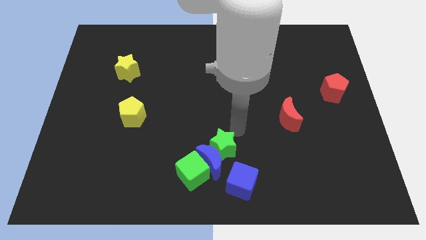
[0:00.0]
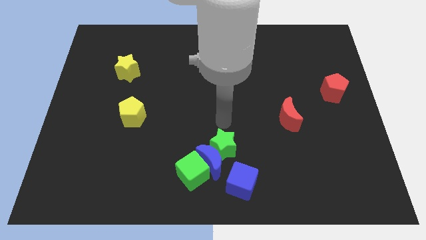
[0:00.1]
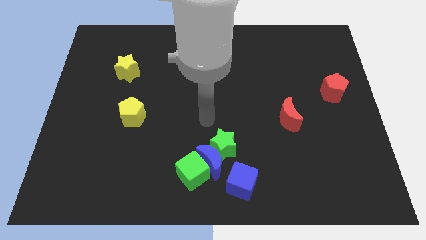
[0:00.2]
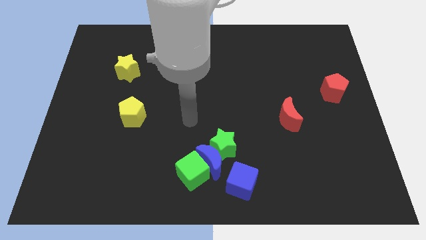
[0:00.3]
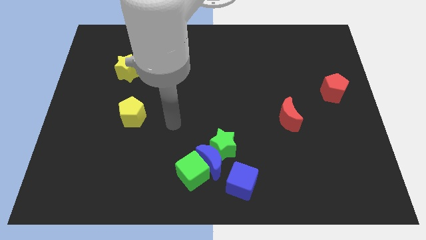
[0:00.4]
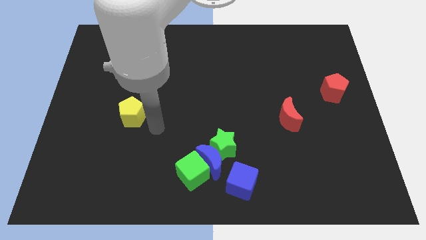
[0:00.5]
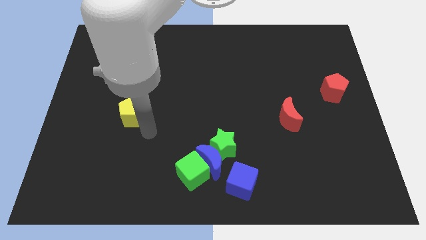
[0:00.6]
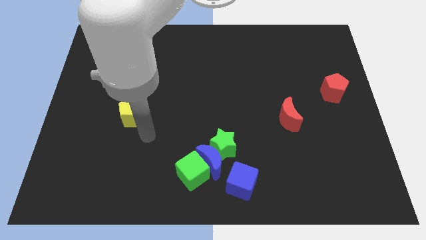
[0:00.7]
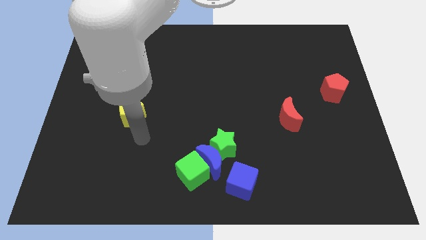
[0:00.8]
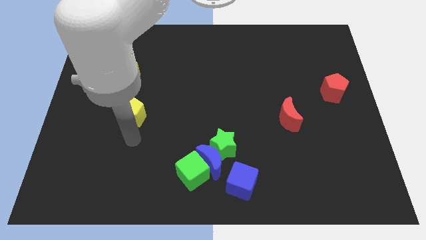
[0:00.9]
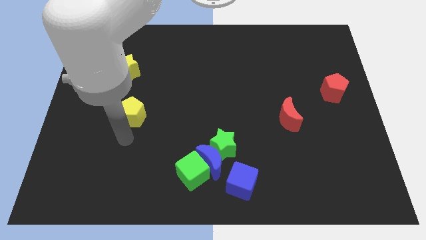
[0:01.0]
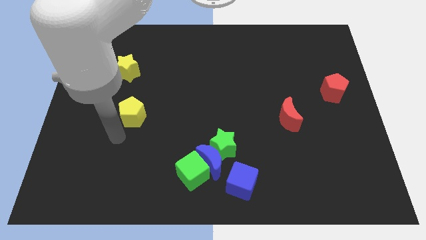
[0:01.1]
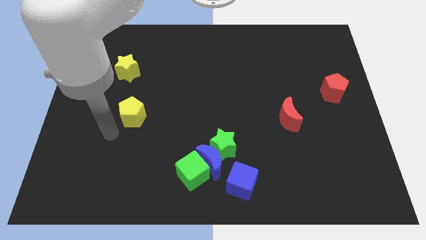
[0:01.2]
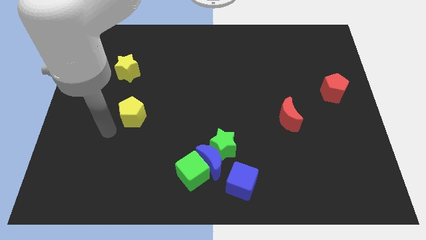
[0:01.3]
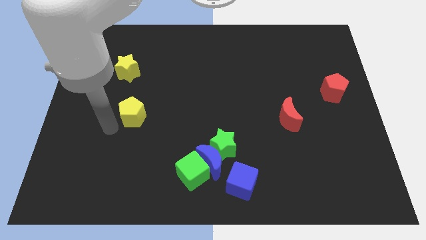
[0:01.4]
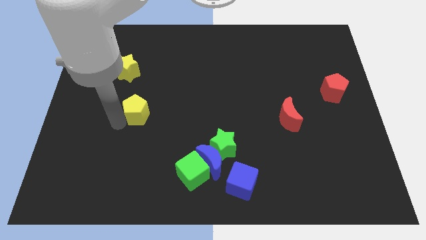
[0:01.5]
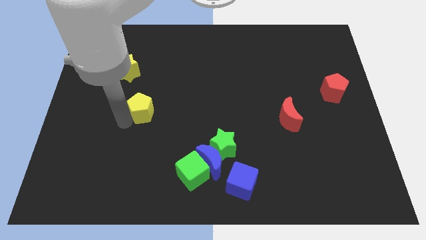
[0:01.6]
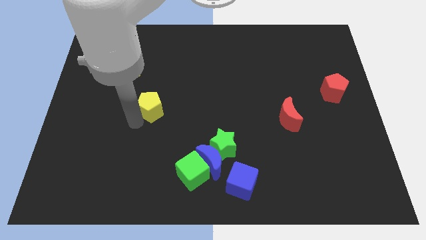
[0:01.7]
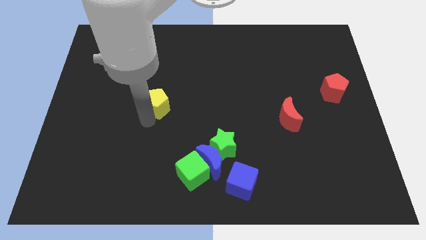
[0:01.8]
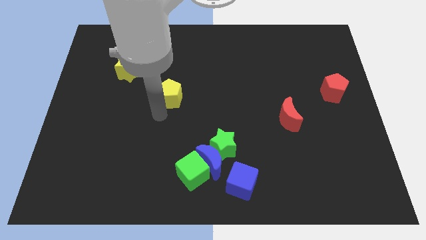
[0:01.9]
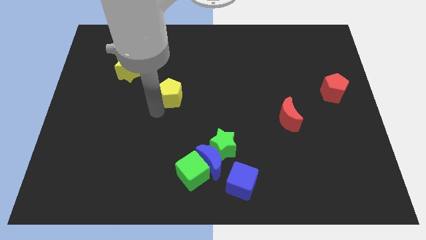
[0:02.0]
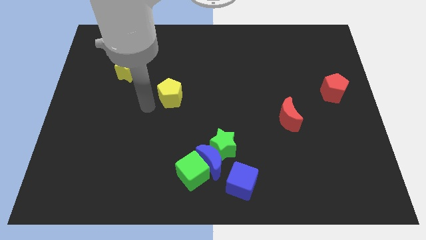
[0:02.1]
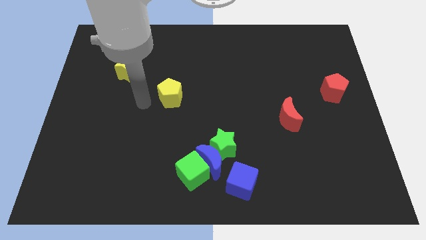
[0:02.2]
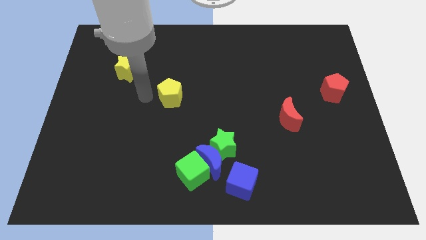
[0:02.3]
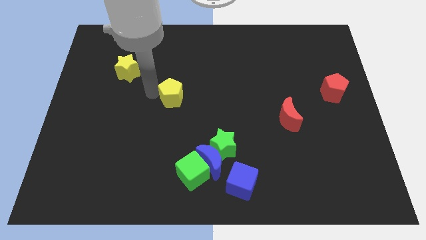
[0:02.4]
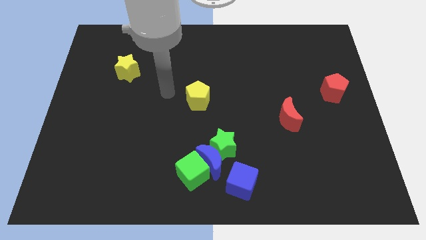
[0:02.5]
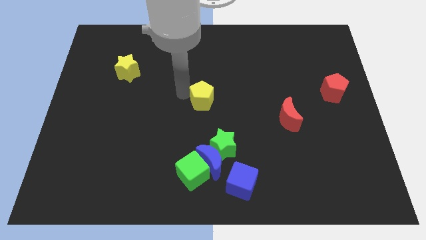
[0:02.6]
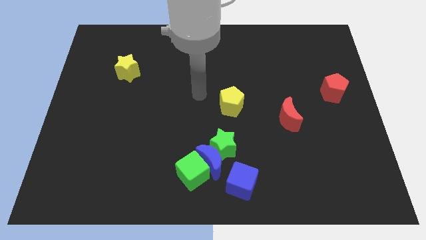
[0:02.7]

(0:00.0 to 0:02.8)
push the yellow pentagon to the top of the green star

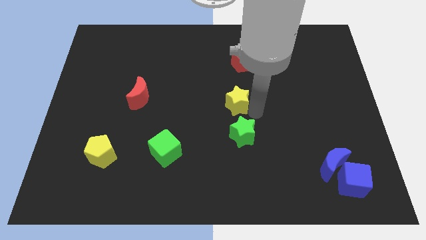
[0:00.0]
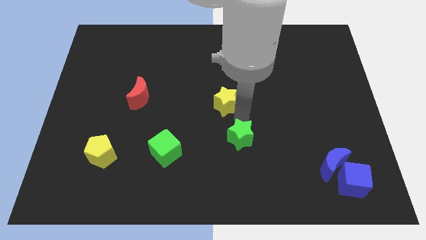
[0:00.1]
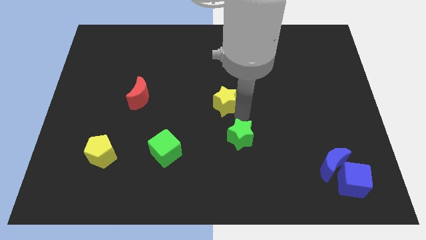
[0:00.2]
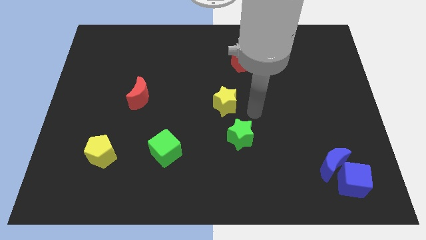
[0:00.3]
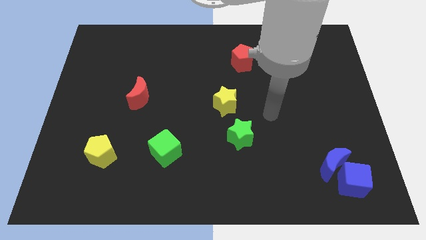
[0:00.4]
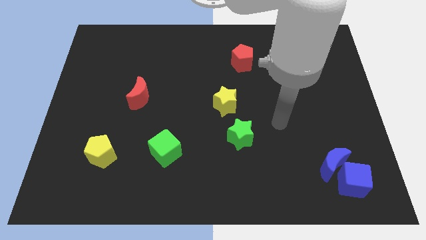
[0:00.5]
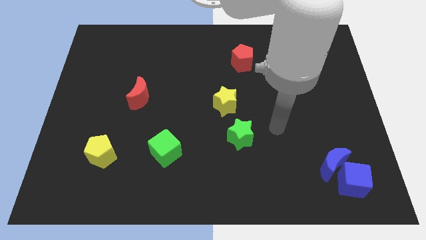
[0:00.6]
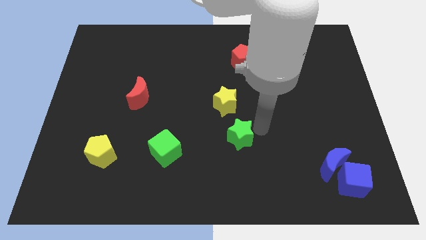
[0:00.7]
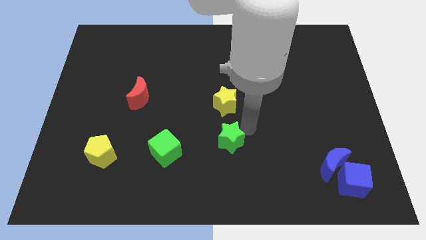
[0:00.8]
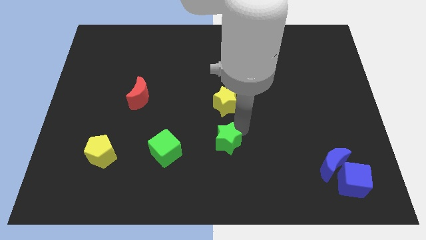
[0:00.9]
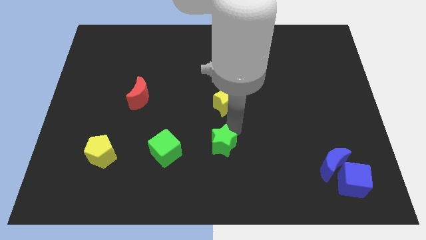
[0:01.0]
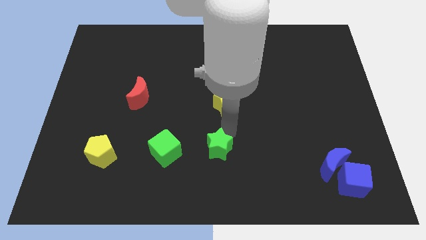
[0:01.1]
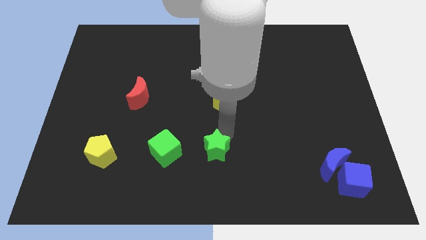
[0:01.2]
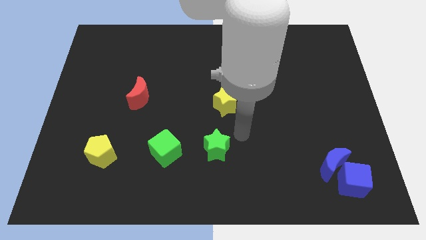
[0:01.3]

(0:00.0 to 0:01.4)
place the green star horizontally to the right side of the green cube

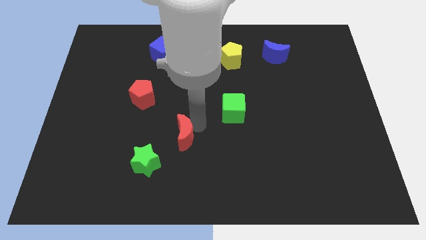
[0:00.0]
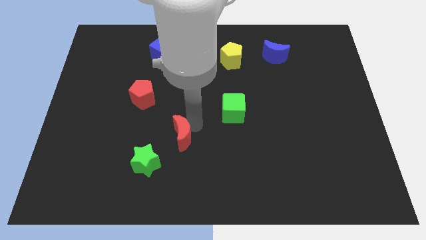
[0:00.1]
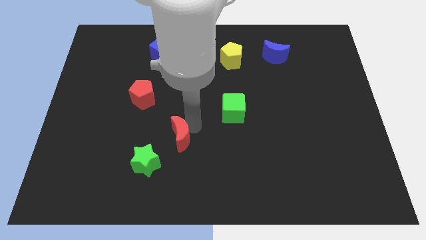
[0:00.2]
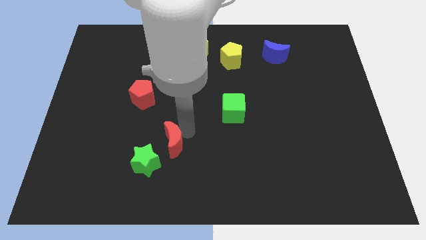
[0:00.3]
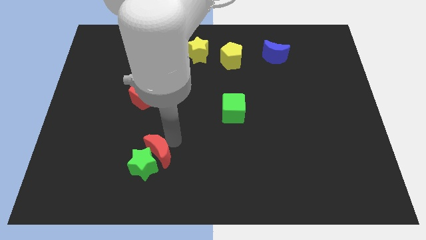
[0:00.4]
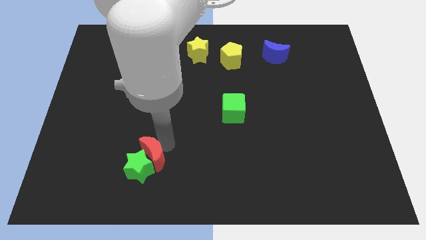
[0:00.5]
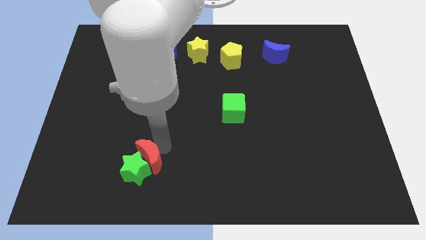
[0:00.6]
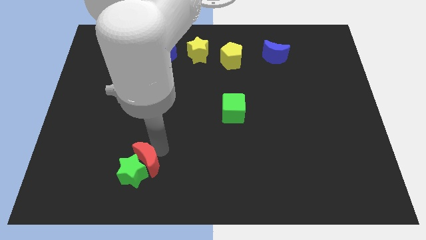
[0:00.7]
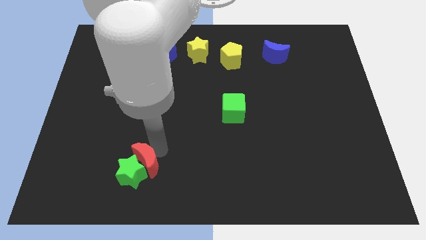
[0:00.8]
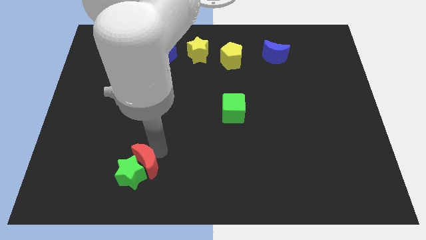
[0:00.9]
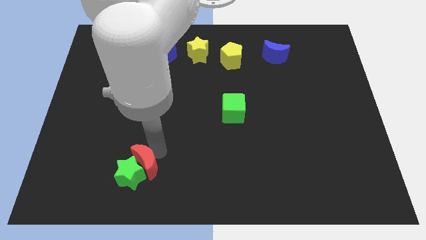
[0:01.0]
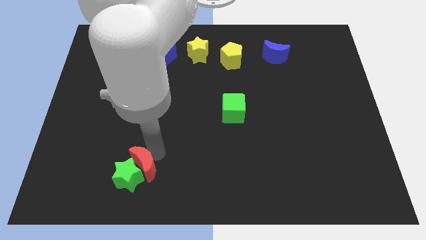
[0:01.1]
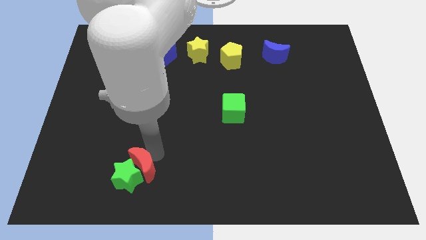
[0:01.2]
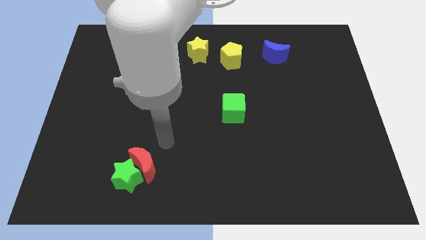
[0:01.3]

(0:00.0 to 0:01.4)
place red crescent below red pentagon

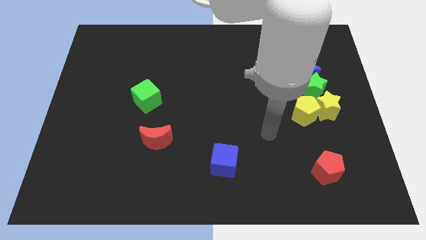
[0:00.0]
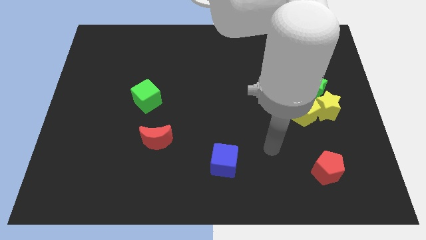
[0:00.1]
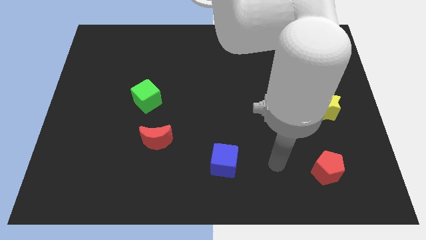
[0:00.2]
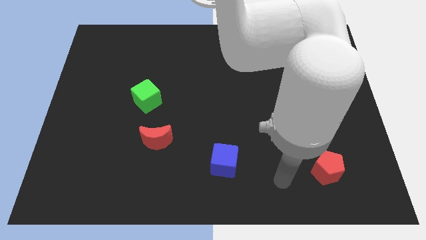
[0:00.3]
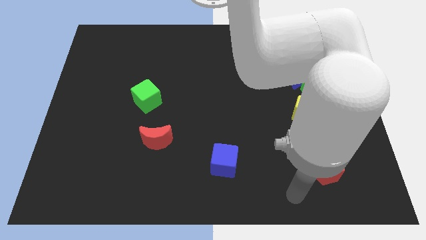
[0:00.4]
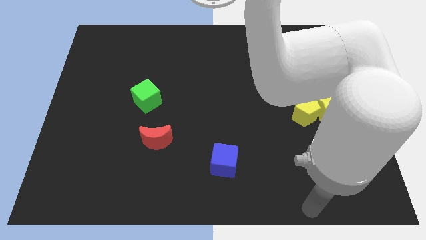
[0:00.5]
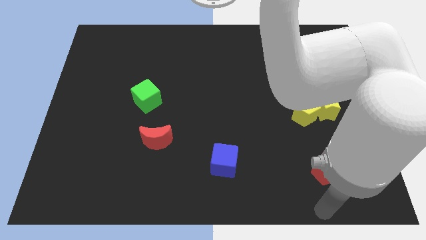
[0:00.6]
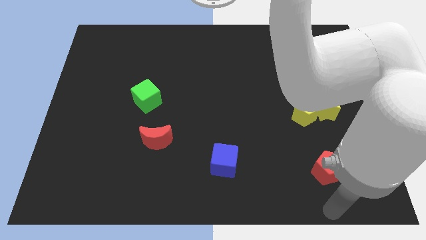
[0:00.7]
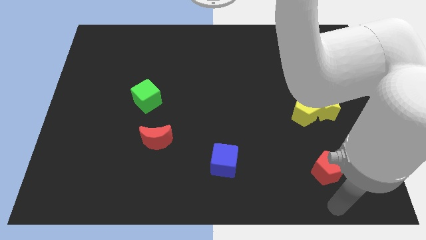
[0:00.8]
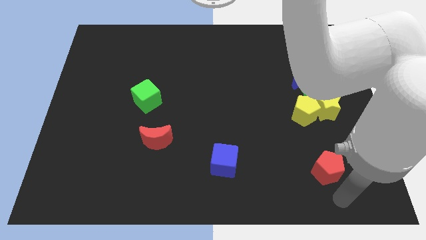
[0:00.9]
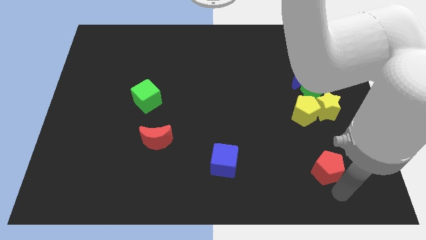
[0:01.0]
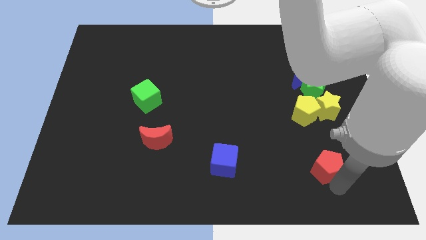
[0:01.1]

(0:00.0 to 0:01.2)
place the arm down to the red pentagon

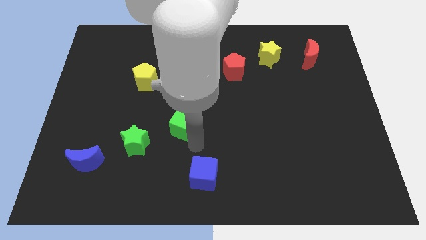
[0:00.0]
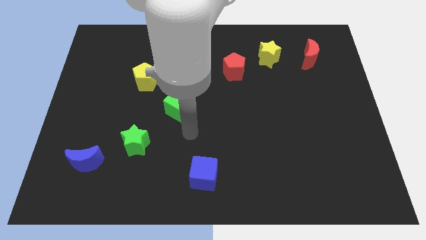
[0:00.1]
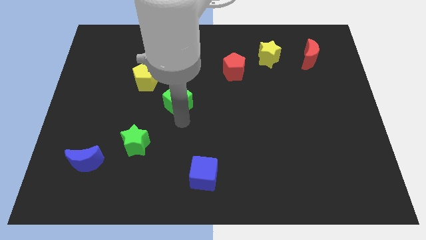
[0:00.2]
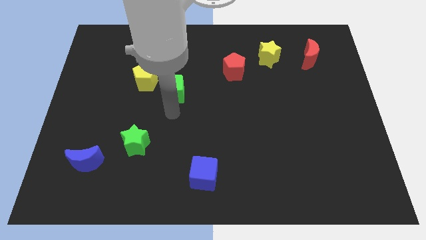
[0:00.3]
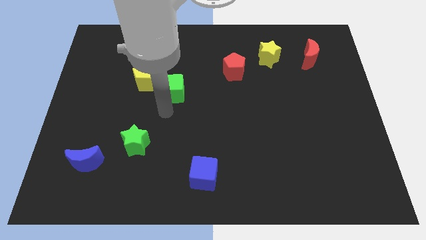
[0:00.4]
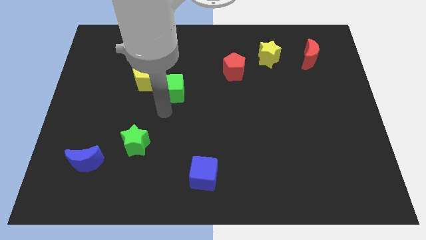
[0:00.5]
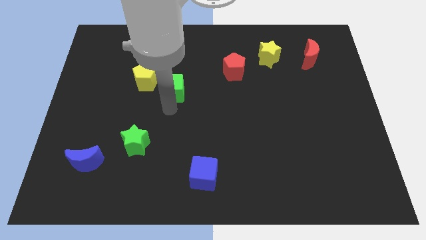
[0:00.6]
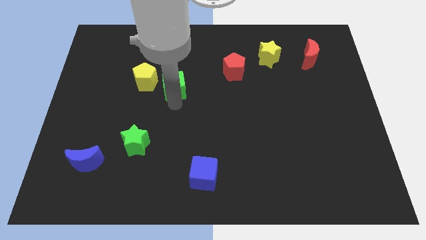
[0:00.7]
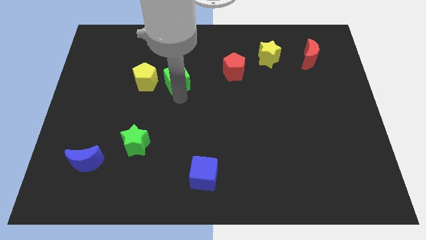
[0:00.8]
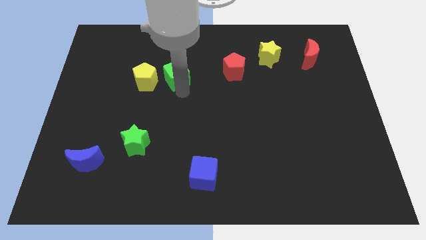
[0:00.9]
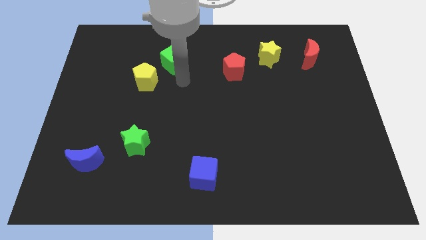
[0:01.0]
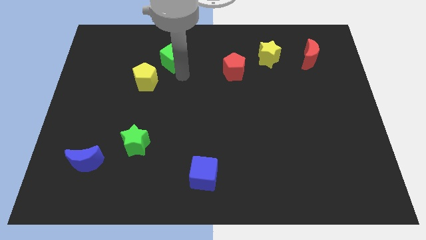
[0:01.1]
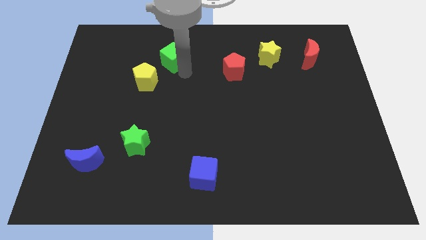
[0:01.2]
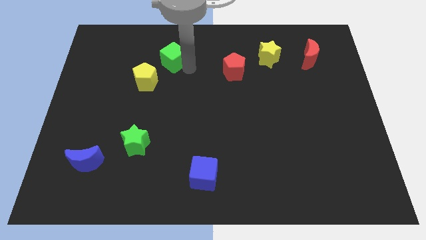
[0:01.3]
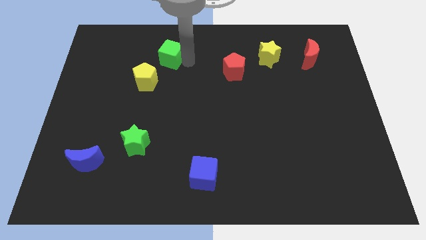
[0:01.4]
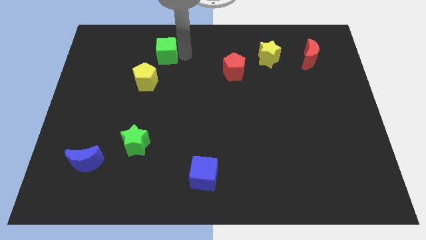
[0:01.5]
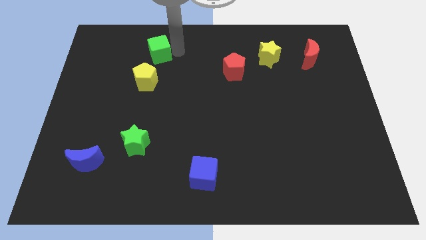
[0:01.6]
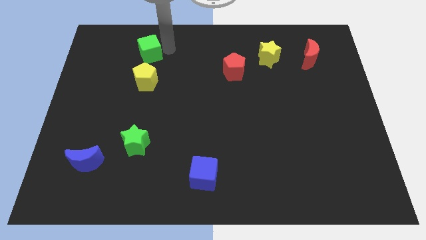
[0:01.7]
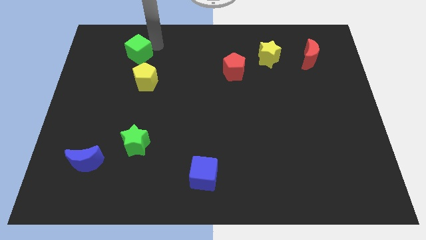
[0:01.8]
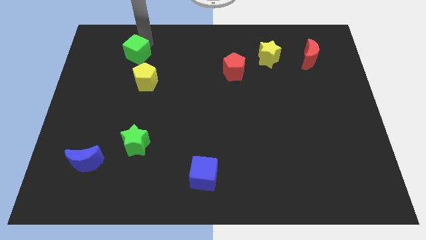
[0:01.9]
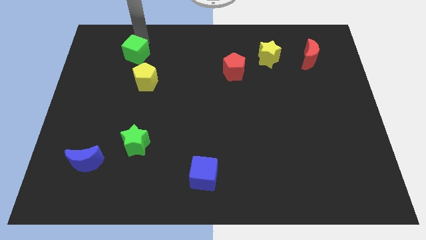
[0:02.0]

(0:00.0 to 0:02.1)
move green cube to top left of yellow pentagon
